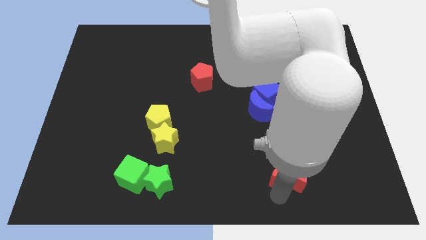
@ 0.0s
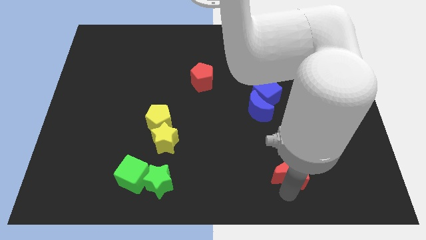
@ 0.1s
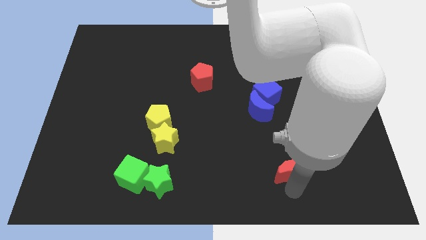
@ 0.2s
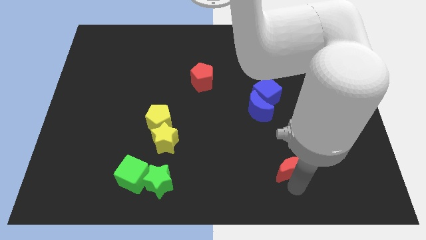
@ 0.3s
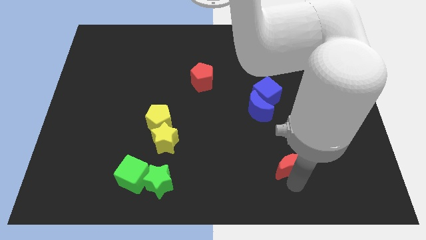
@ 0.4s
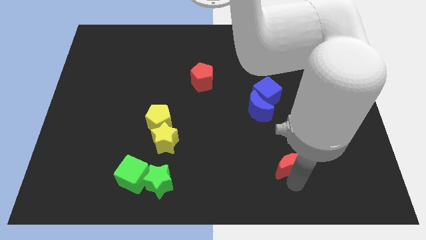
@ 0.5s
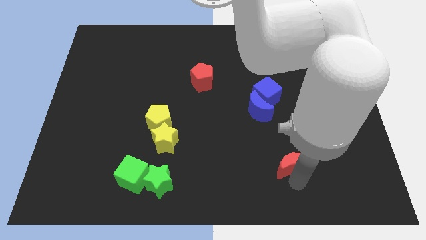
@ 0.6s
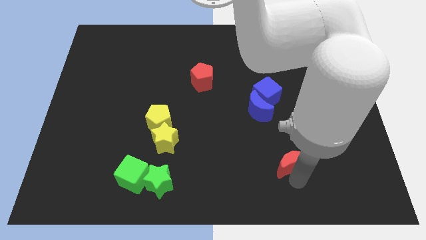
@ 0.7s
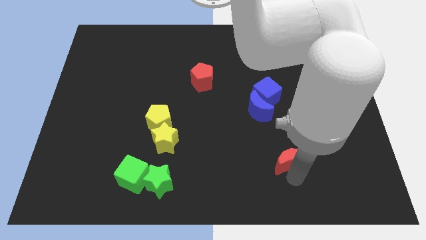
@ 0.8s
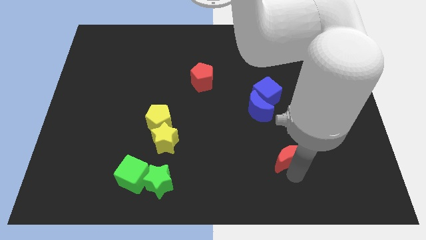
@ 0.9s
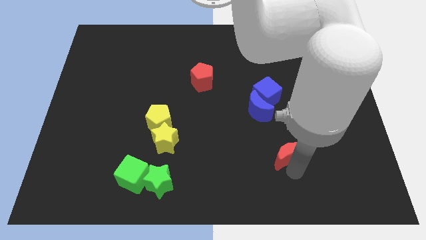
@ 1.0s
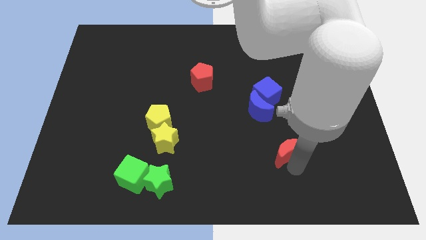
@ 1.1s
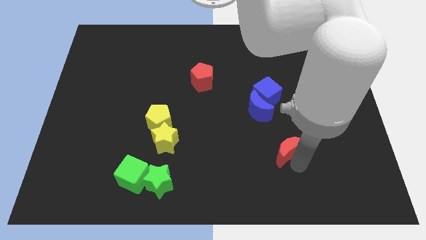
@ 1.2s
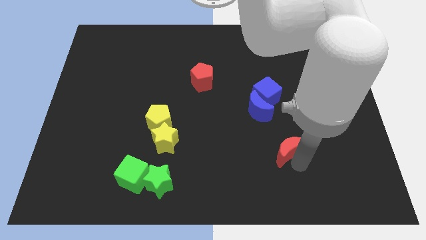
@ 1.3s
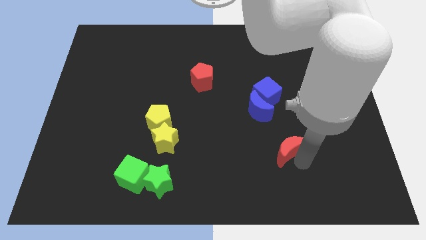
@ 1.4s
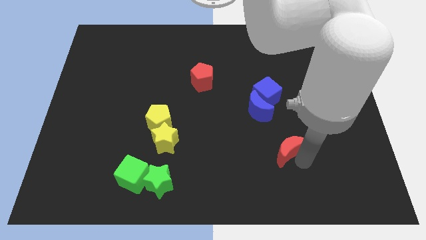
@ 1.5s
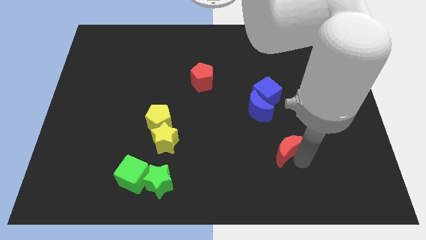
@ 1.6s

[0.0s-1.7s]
slide the red pentagon to the top

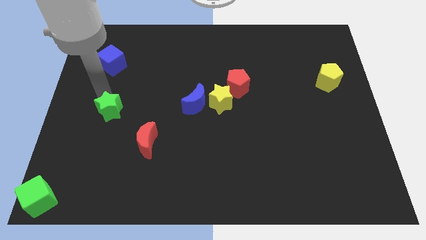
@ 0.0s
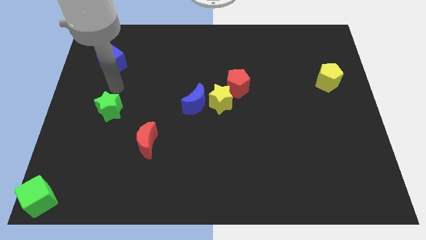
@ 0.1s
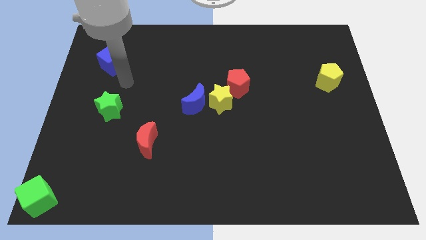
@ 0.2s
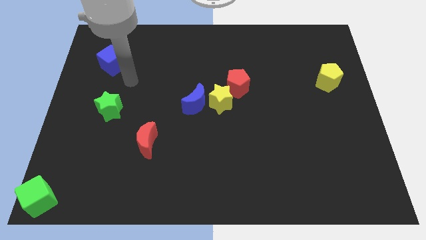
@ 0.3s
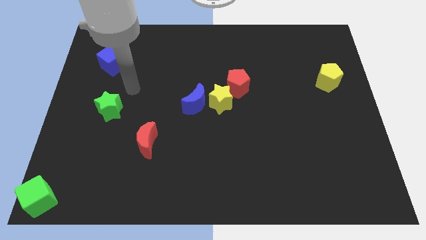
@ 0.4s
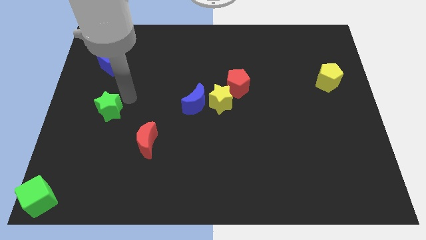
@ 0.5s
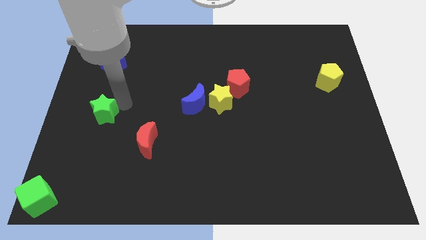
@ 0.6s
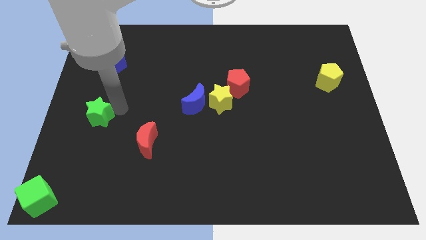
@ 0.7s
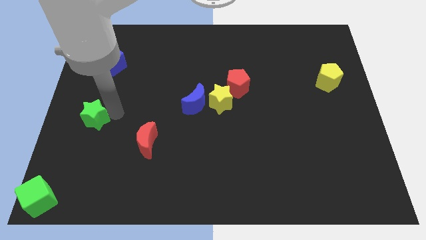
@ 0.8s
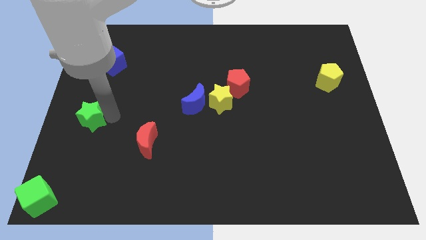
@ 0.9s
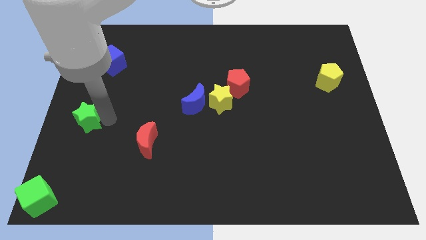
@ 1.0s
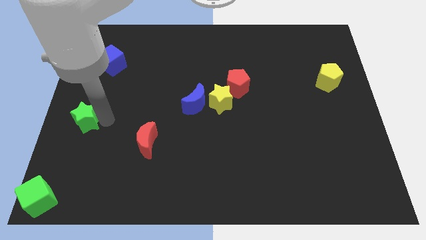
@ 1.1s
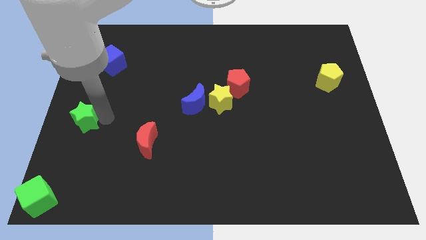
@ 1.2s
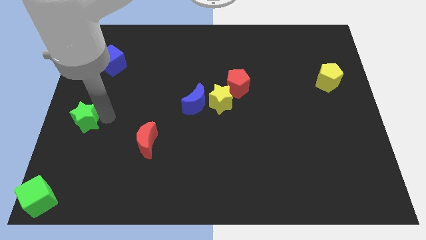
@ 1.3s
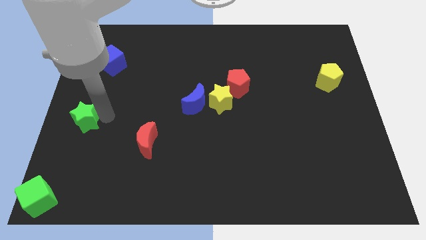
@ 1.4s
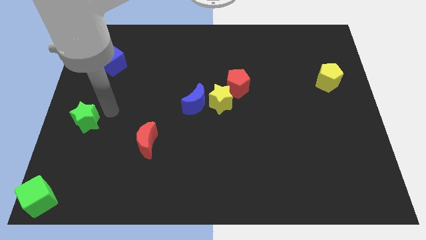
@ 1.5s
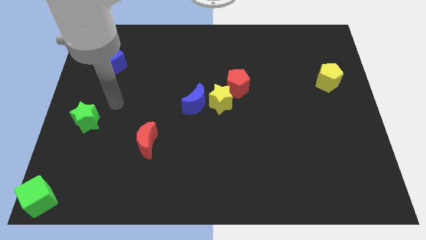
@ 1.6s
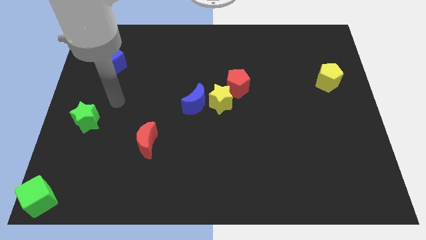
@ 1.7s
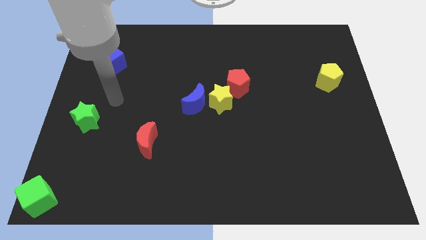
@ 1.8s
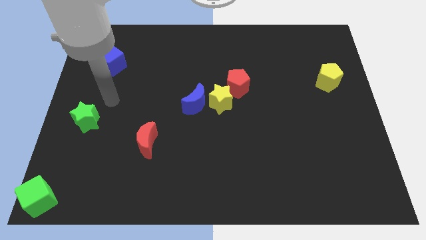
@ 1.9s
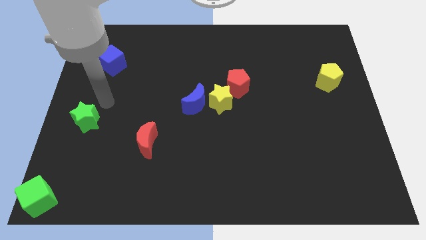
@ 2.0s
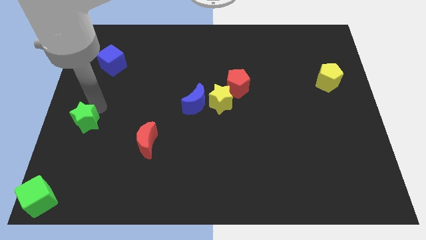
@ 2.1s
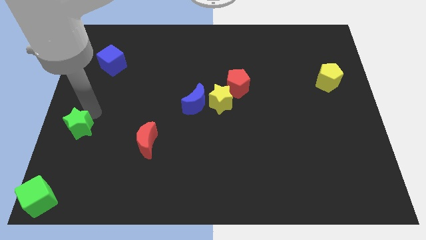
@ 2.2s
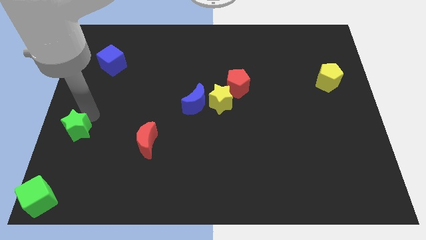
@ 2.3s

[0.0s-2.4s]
push green star downwards

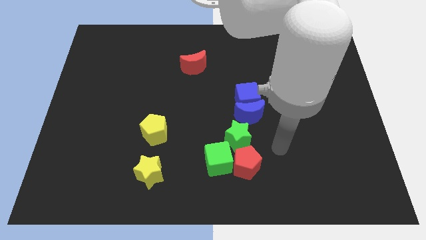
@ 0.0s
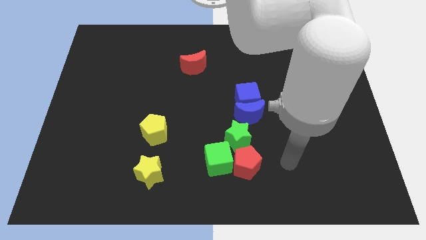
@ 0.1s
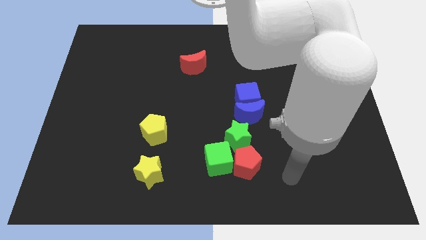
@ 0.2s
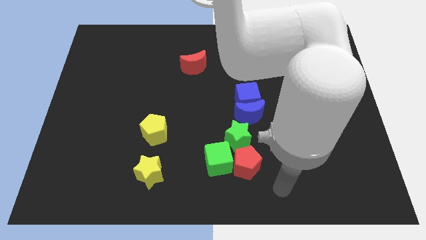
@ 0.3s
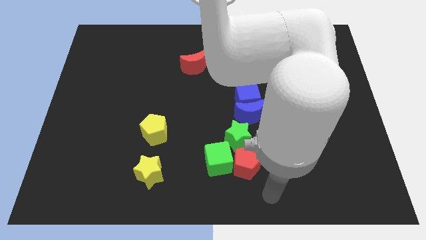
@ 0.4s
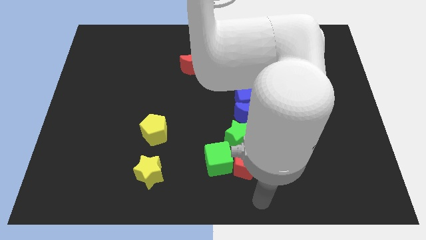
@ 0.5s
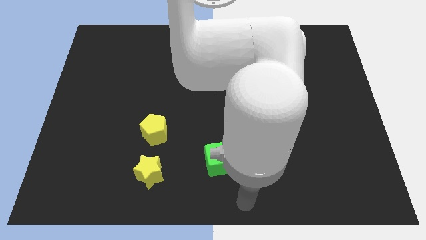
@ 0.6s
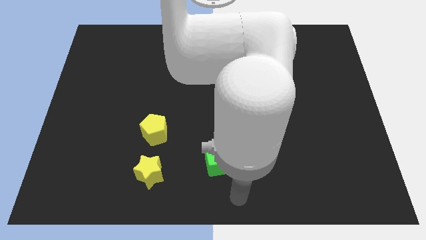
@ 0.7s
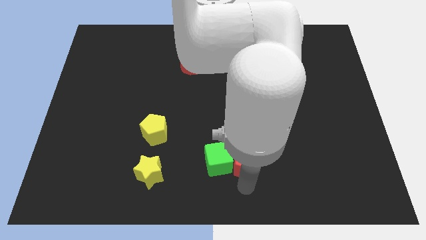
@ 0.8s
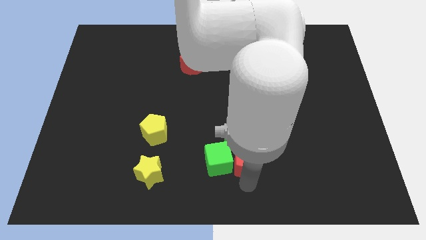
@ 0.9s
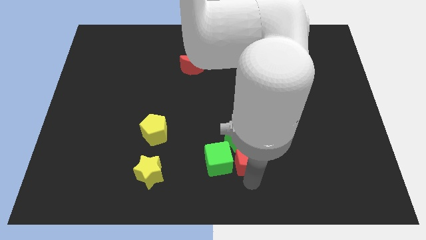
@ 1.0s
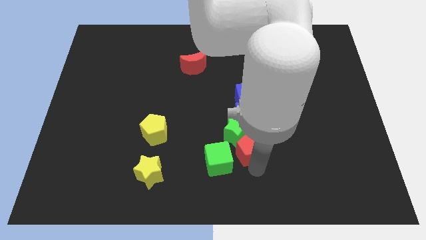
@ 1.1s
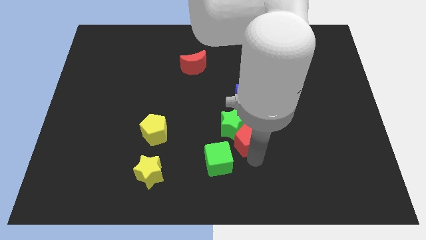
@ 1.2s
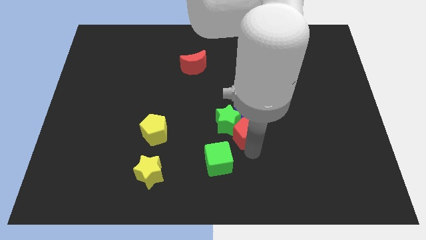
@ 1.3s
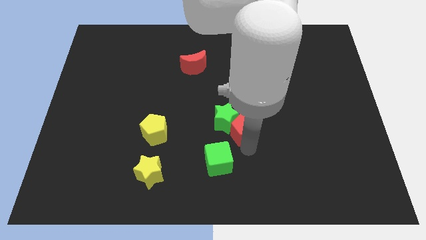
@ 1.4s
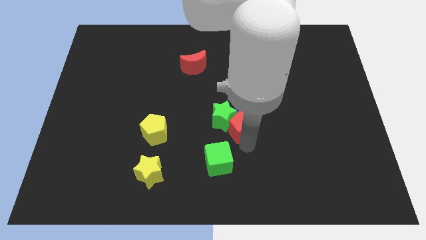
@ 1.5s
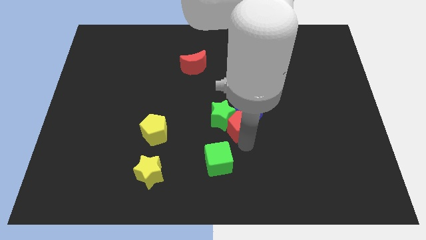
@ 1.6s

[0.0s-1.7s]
push the red pentagon into the green star

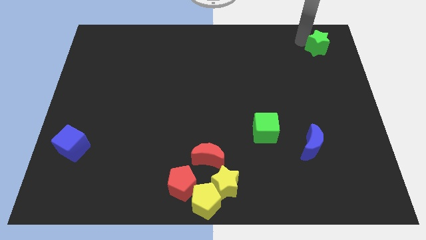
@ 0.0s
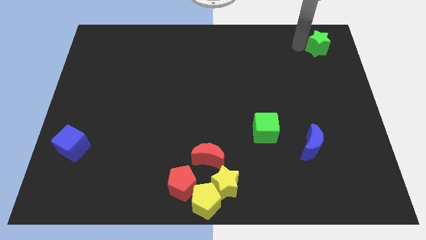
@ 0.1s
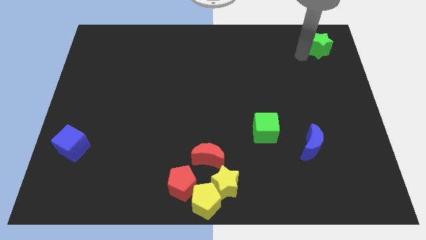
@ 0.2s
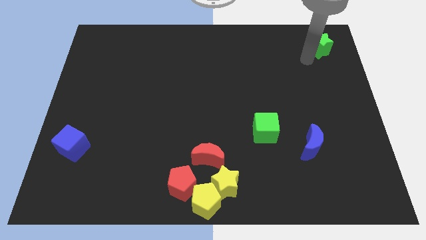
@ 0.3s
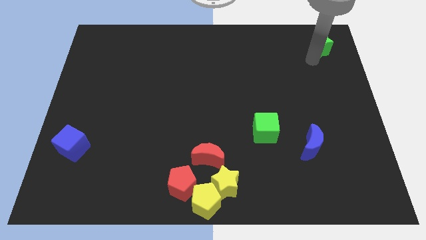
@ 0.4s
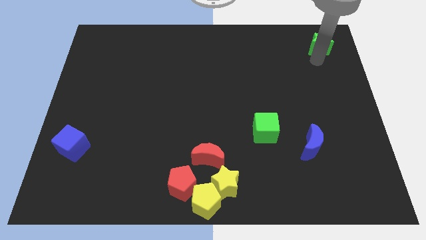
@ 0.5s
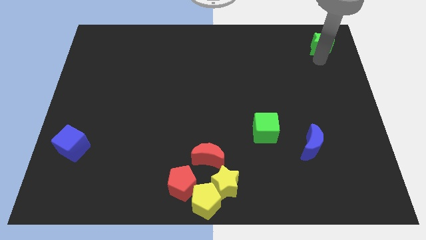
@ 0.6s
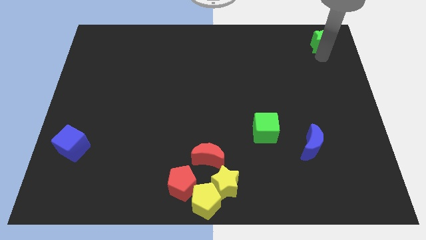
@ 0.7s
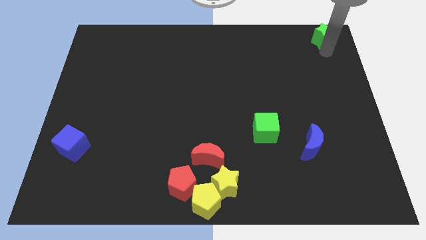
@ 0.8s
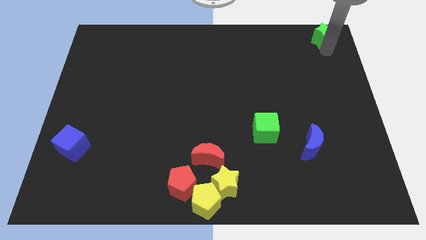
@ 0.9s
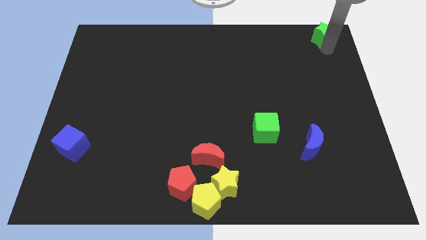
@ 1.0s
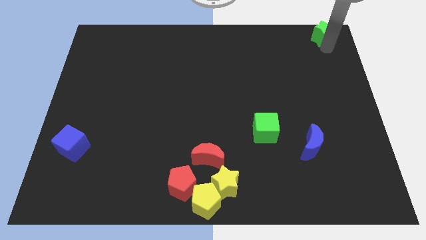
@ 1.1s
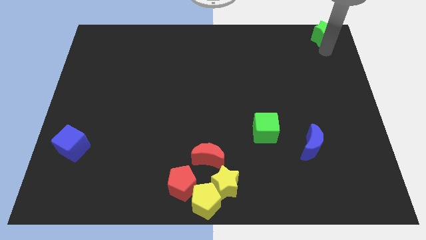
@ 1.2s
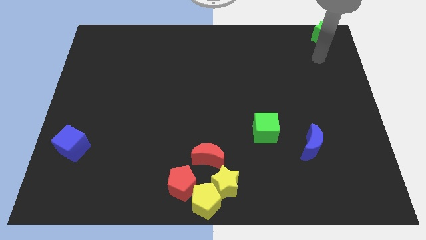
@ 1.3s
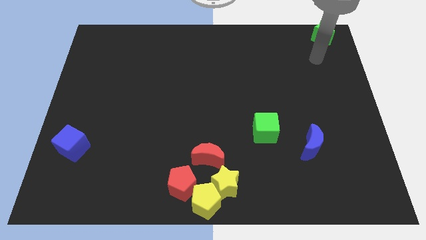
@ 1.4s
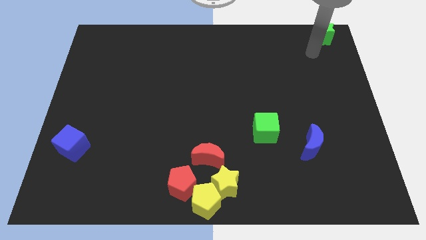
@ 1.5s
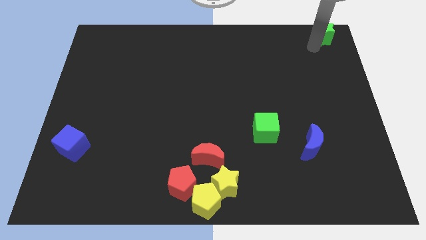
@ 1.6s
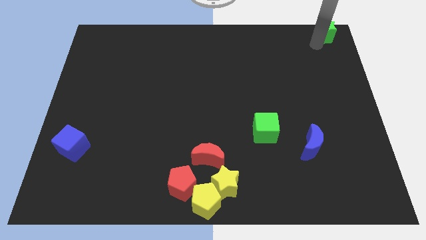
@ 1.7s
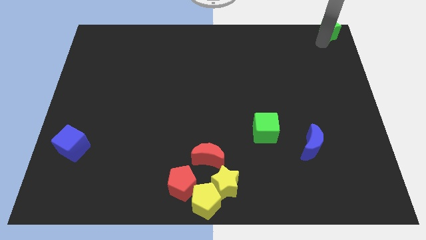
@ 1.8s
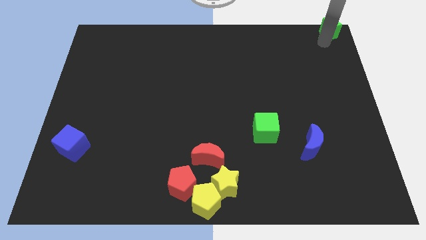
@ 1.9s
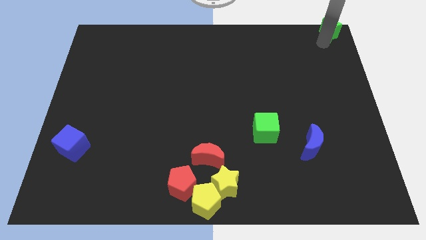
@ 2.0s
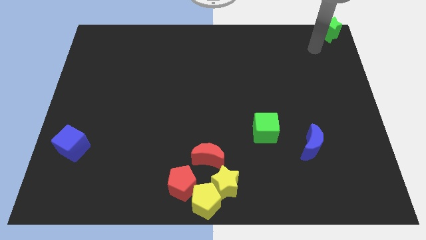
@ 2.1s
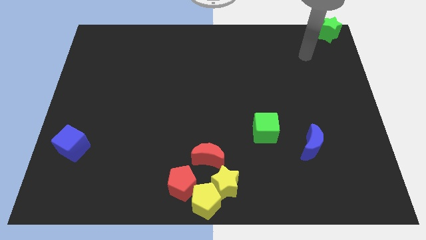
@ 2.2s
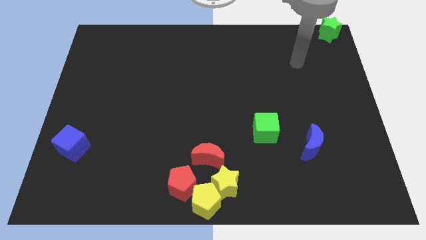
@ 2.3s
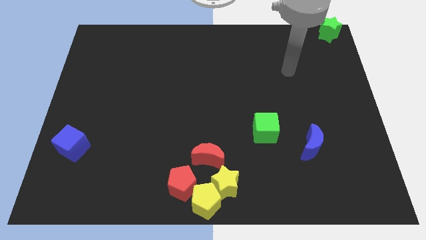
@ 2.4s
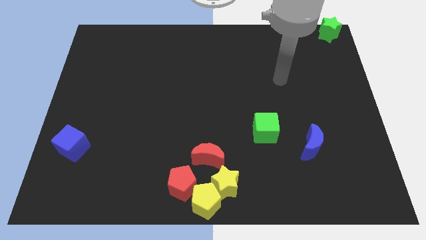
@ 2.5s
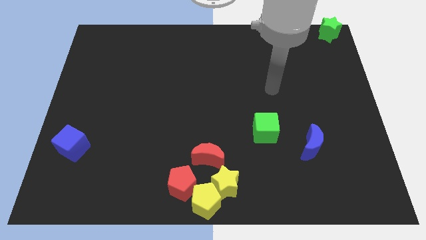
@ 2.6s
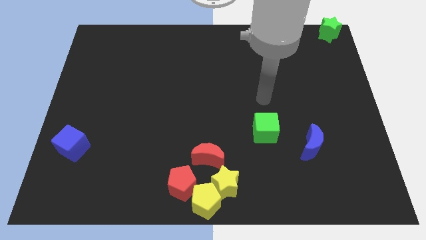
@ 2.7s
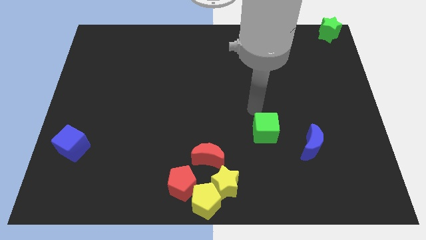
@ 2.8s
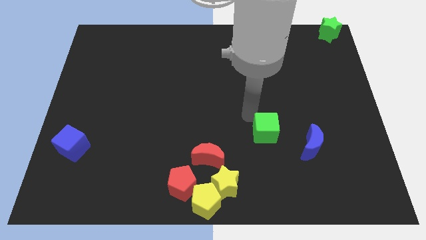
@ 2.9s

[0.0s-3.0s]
move the green star to the top right corner of the board

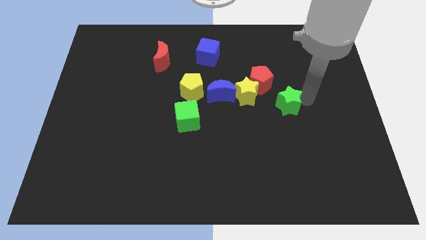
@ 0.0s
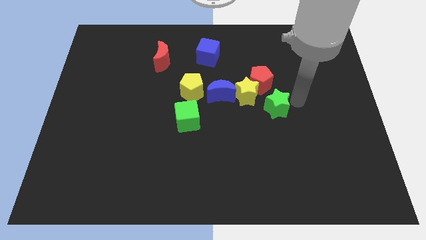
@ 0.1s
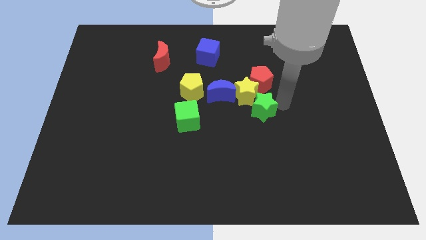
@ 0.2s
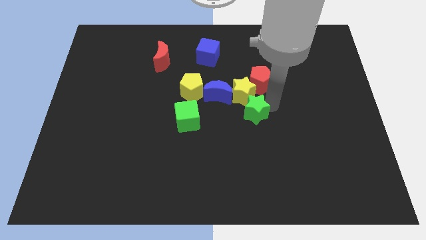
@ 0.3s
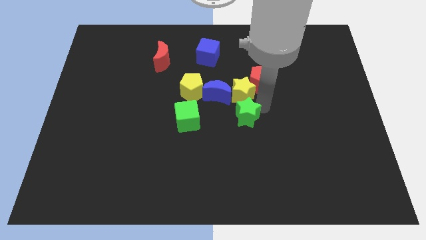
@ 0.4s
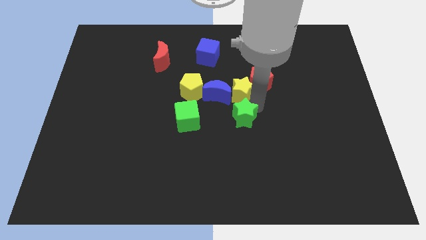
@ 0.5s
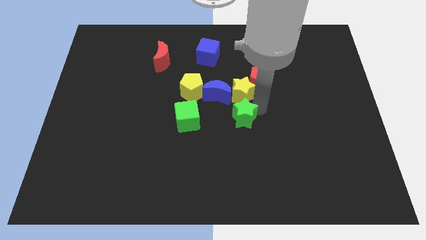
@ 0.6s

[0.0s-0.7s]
place the green star below the yellow star
